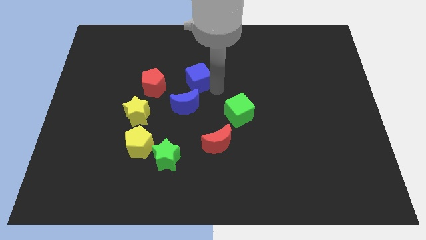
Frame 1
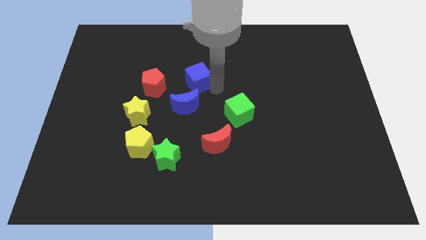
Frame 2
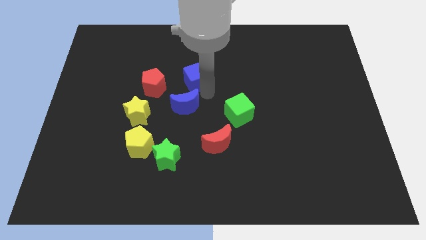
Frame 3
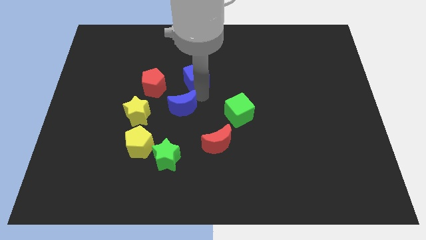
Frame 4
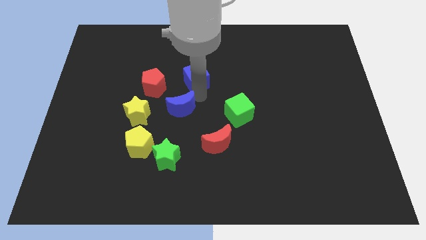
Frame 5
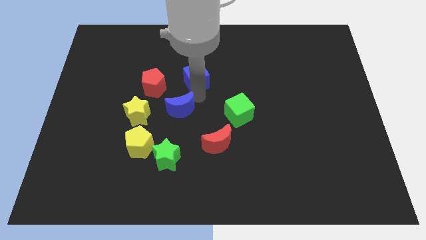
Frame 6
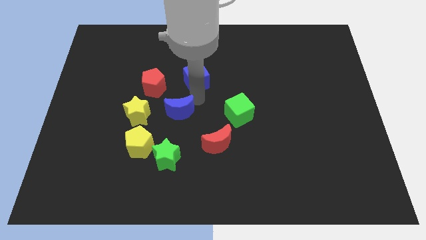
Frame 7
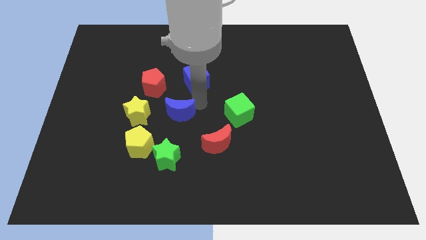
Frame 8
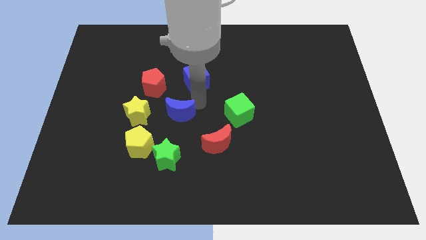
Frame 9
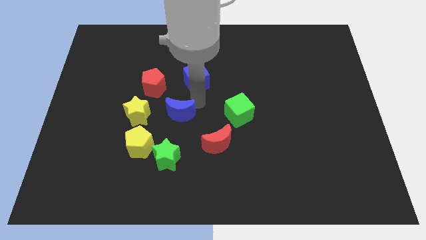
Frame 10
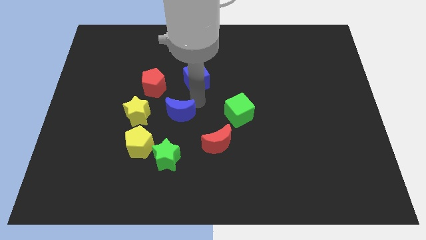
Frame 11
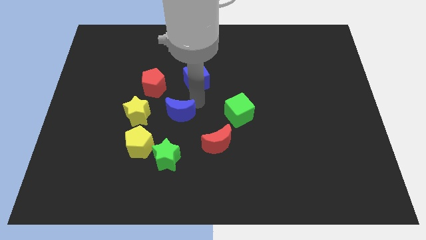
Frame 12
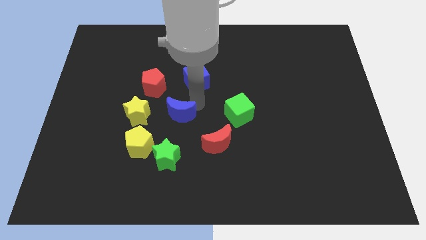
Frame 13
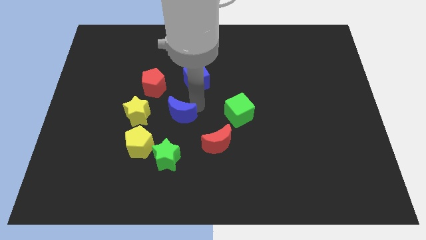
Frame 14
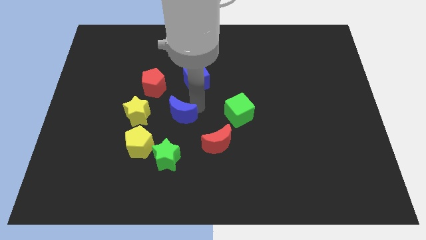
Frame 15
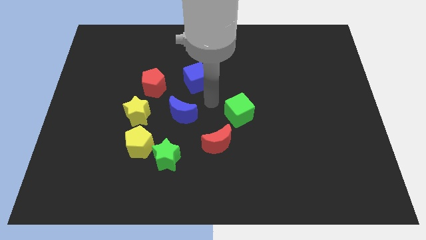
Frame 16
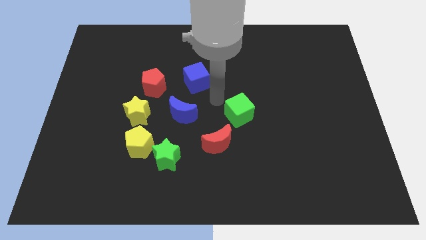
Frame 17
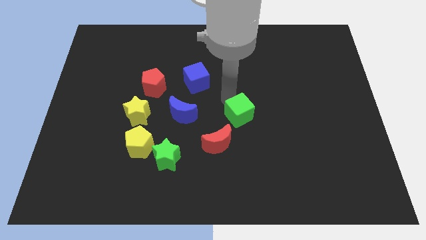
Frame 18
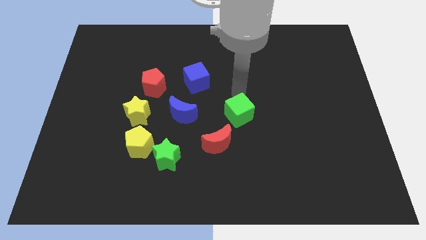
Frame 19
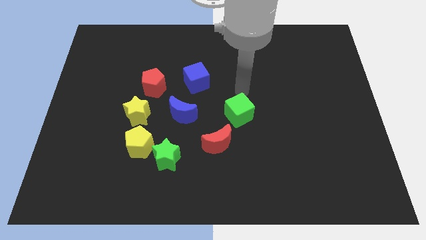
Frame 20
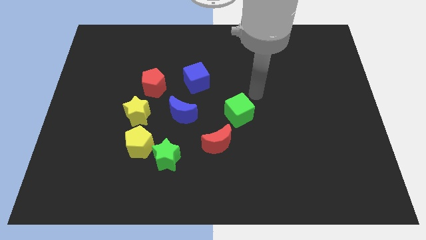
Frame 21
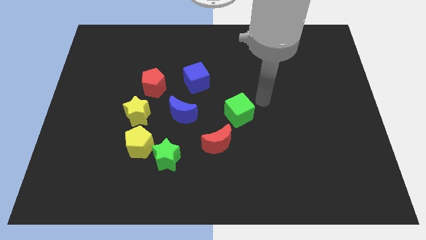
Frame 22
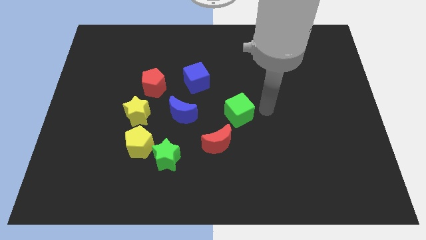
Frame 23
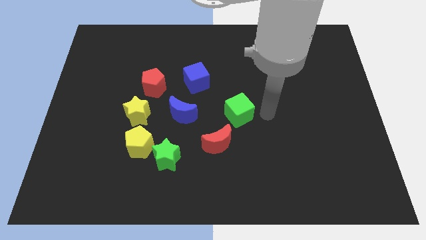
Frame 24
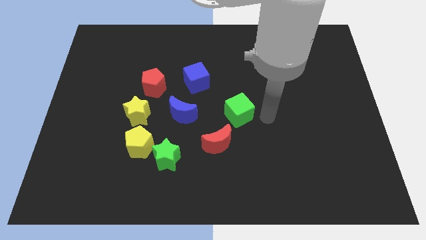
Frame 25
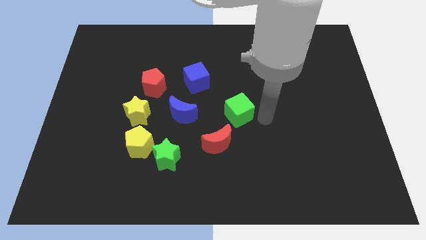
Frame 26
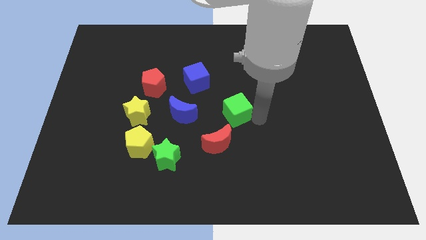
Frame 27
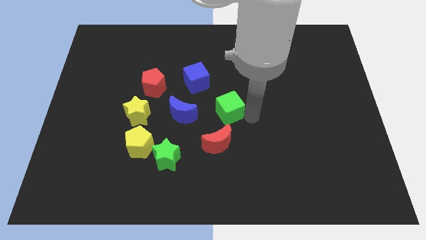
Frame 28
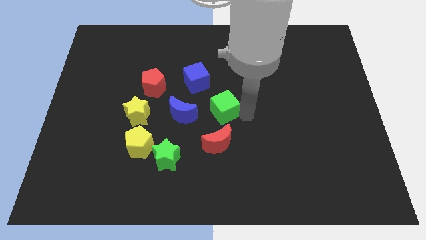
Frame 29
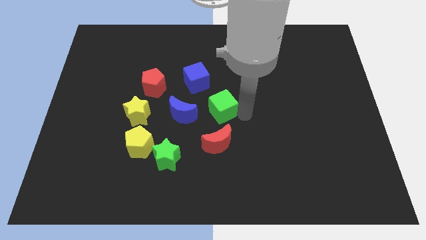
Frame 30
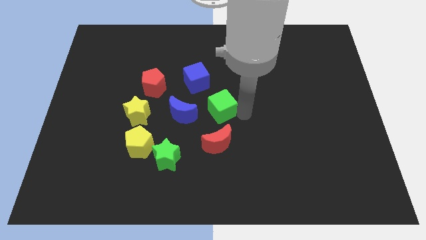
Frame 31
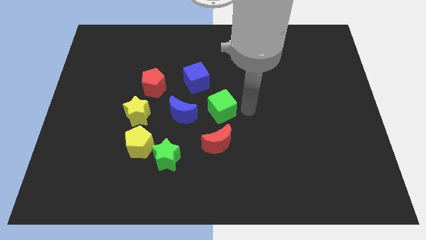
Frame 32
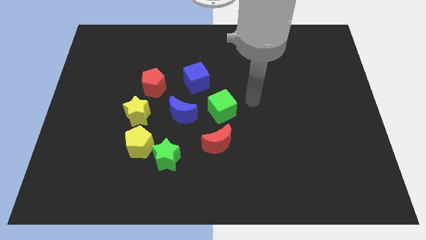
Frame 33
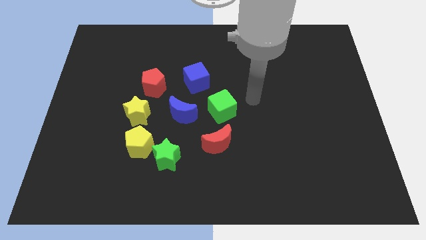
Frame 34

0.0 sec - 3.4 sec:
slide the green cube to the right side of the blue cresent

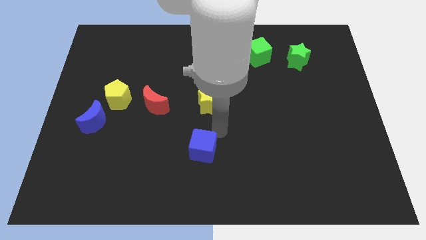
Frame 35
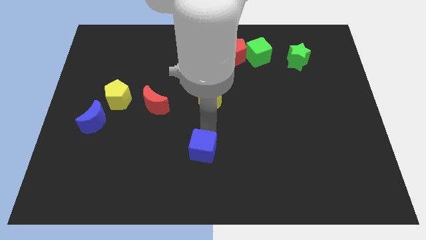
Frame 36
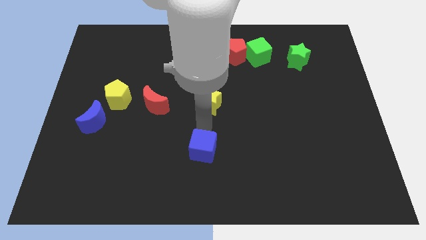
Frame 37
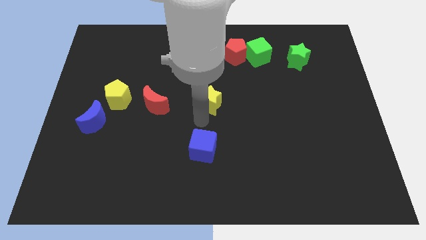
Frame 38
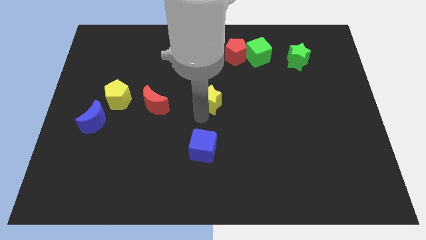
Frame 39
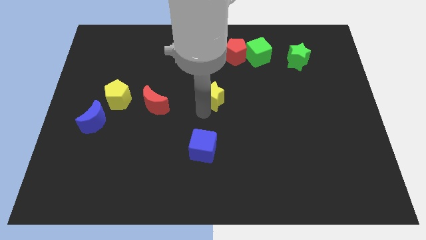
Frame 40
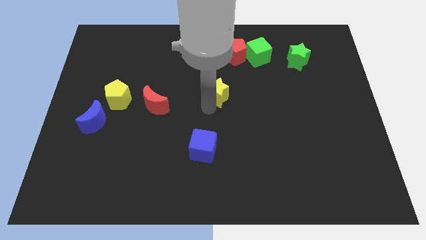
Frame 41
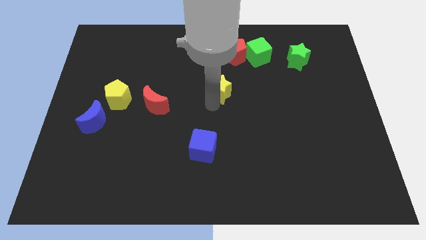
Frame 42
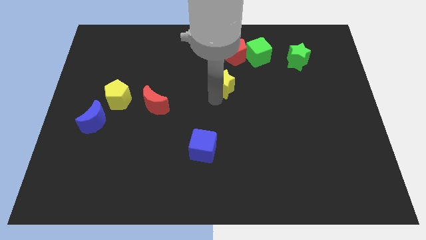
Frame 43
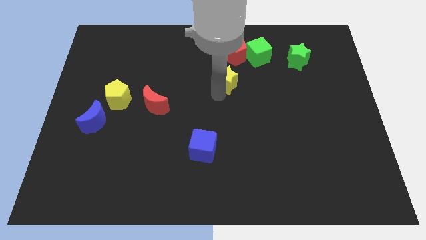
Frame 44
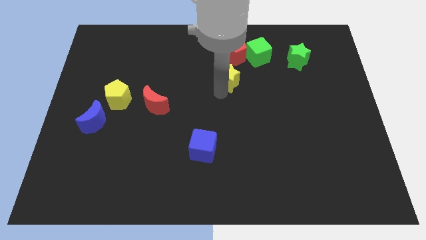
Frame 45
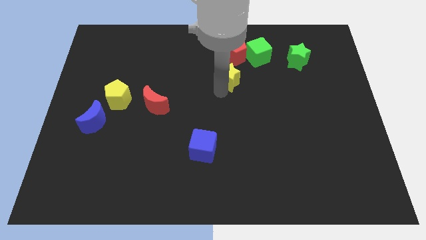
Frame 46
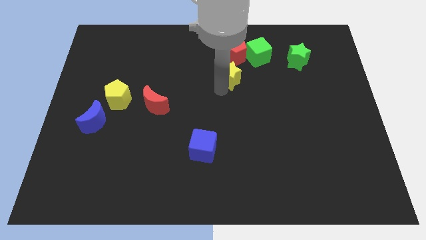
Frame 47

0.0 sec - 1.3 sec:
move the yellow star to the bottom of the red pentagon

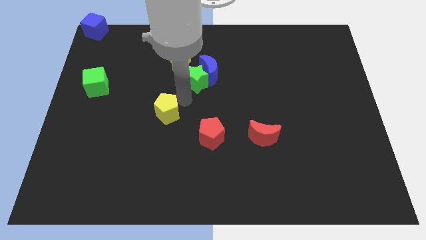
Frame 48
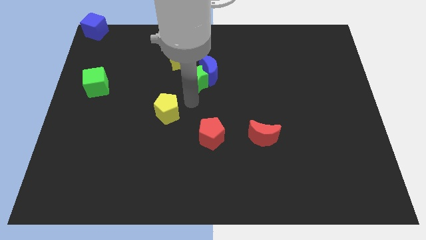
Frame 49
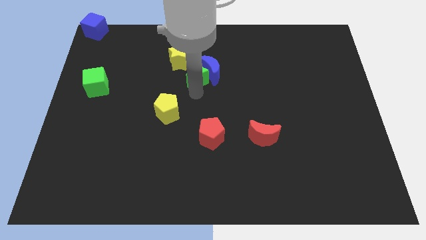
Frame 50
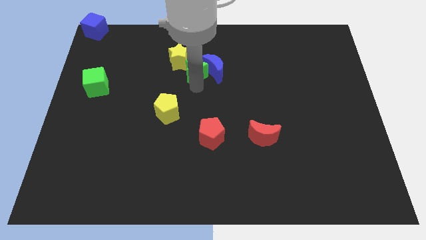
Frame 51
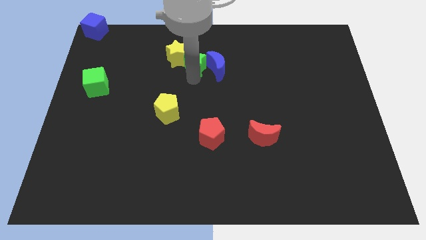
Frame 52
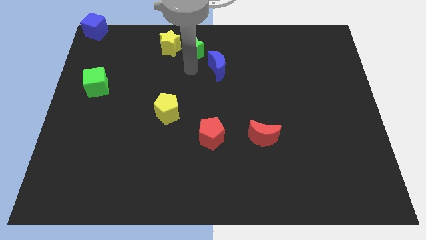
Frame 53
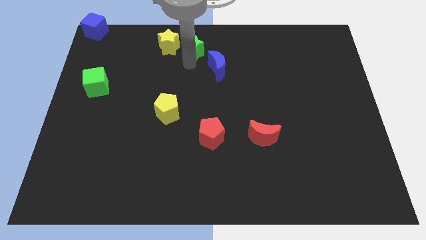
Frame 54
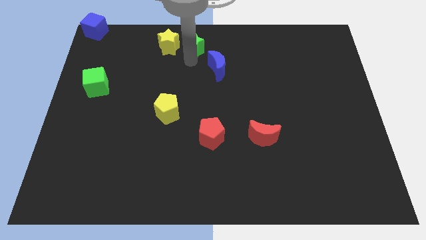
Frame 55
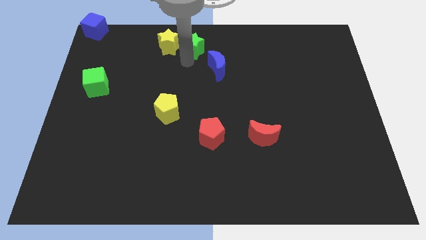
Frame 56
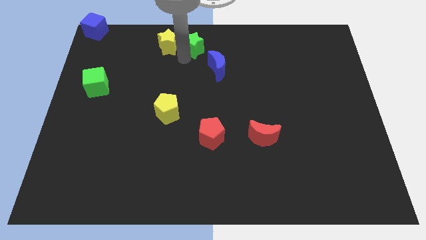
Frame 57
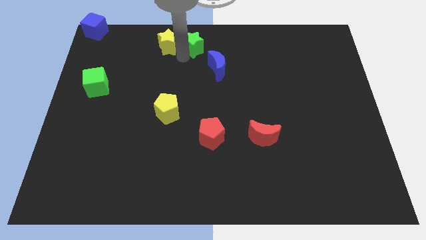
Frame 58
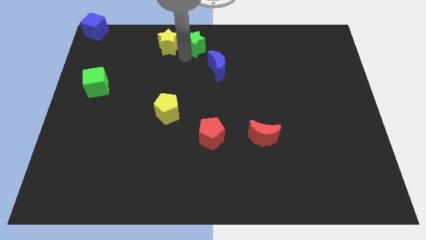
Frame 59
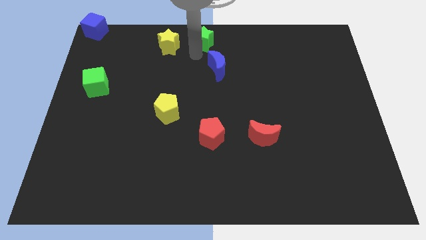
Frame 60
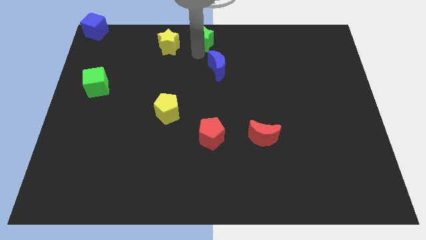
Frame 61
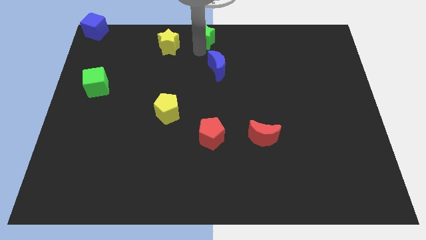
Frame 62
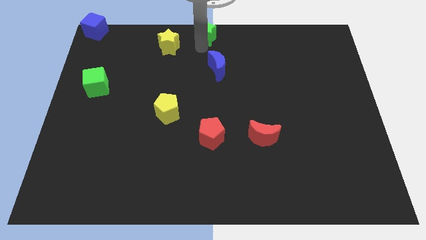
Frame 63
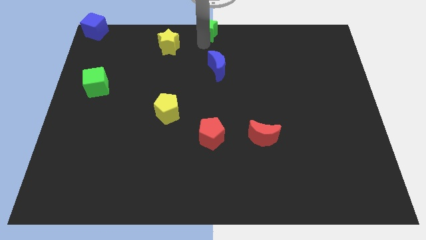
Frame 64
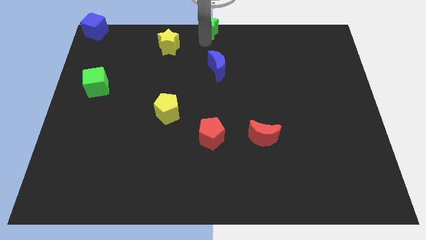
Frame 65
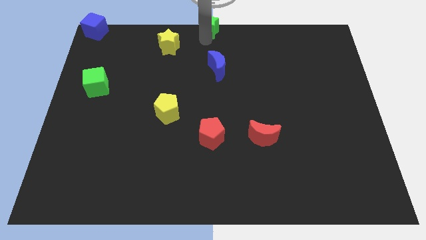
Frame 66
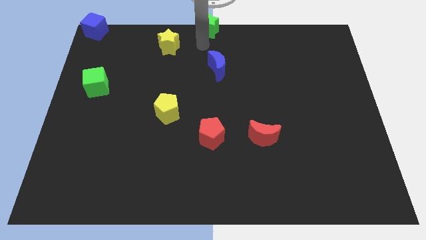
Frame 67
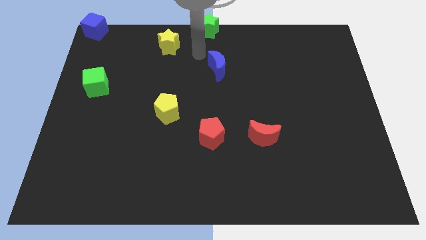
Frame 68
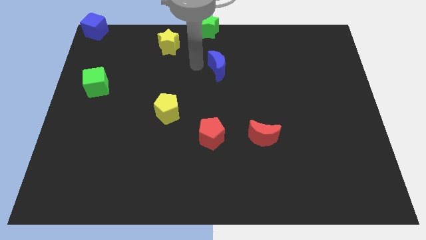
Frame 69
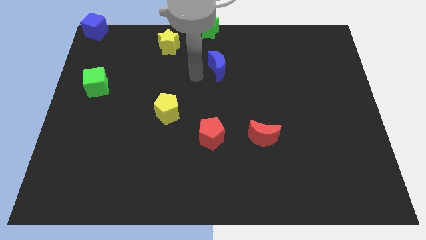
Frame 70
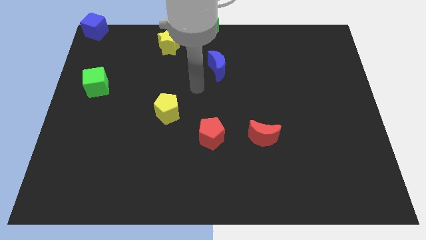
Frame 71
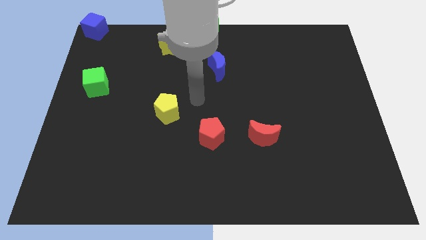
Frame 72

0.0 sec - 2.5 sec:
put the green star at the top center of the board

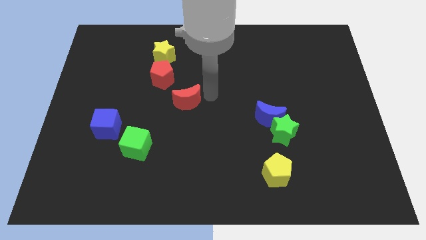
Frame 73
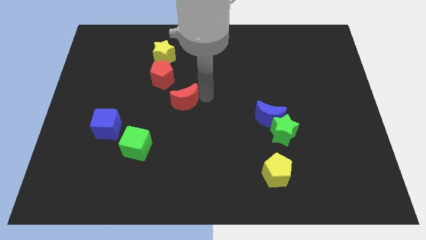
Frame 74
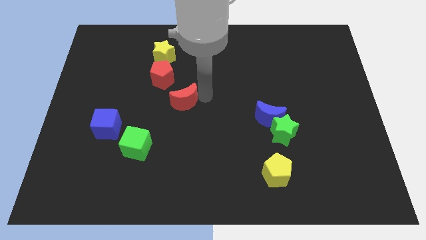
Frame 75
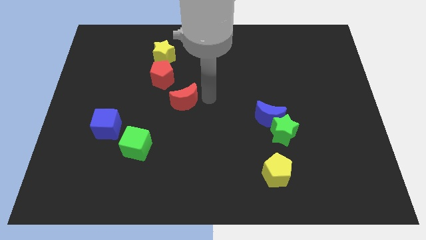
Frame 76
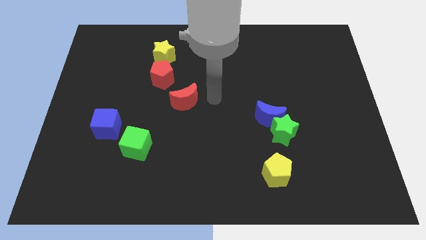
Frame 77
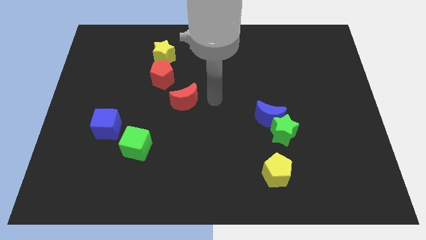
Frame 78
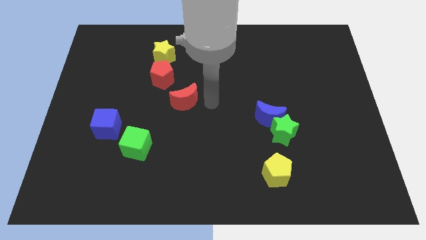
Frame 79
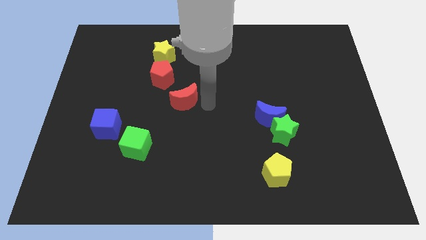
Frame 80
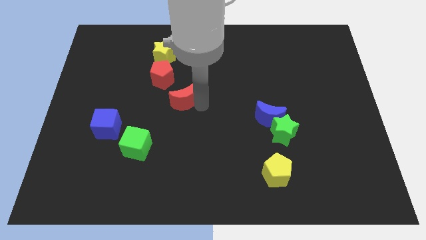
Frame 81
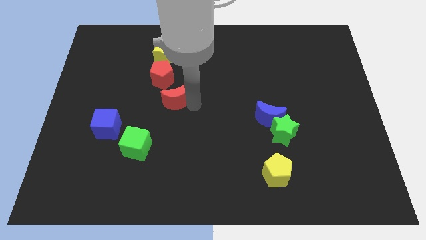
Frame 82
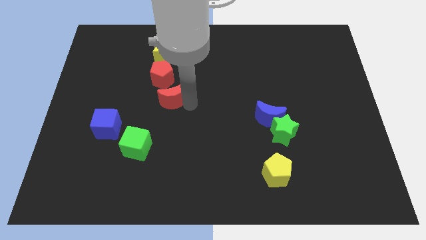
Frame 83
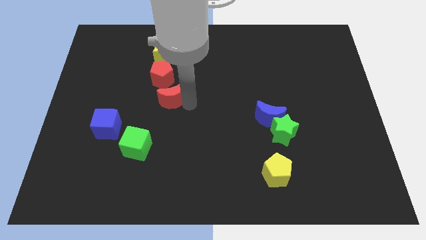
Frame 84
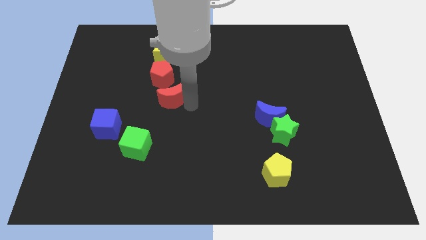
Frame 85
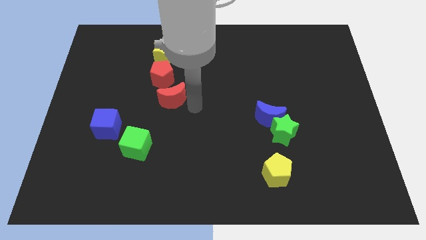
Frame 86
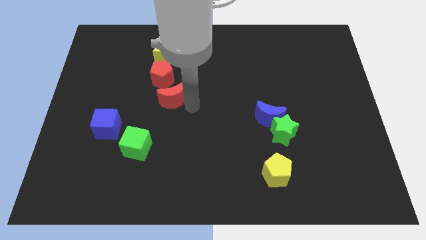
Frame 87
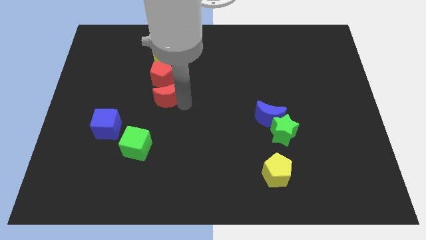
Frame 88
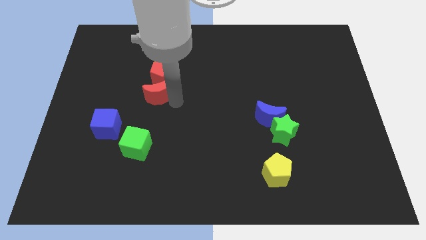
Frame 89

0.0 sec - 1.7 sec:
move the red crescent to the bottom side of the red pentagon
